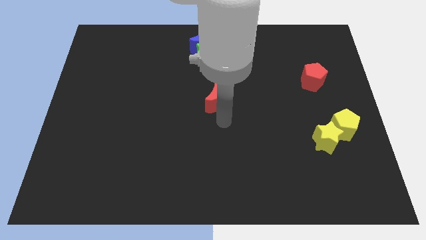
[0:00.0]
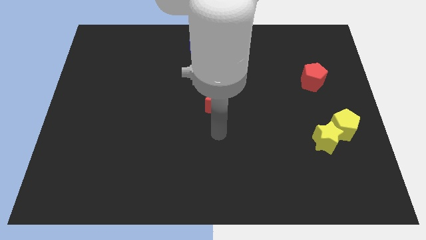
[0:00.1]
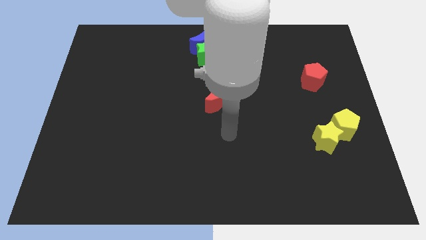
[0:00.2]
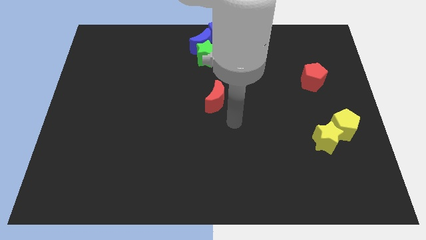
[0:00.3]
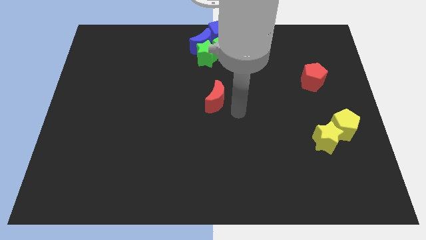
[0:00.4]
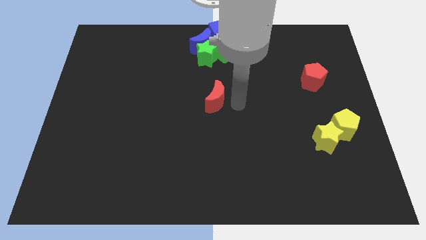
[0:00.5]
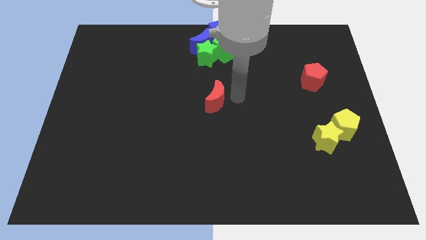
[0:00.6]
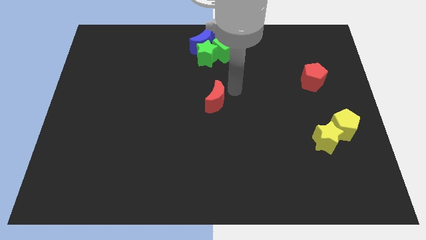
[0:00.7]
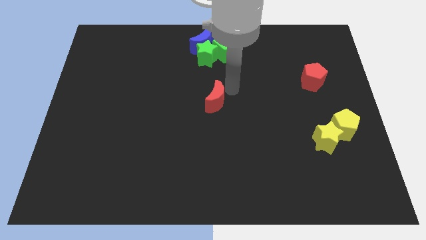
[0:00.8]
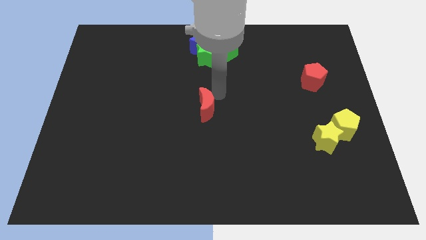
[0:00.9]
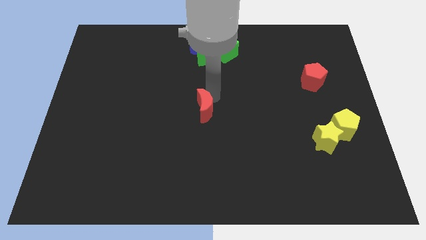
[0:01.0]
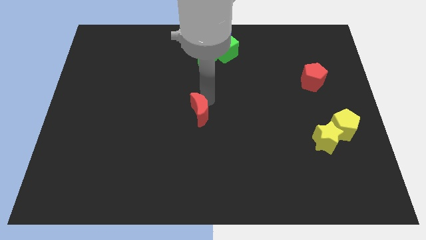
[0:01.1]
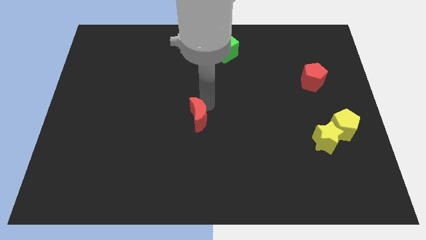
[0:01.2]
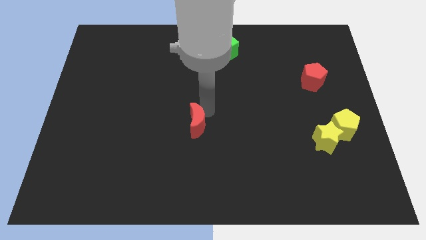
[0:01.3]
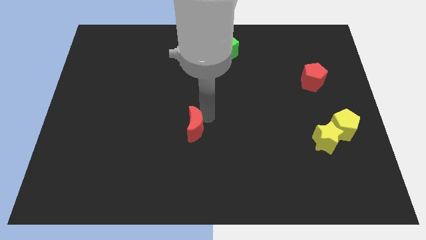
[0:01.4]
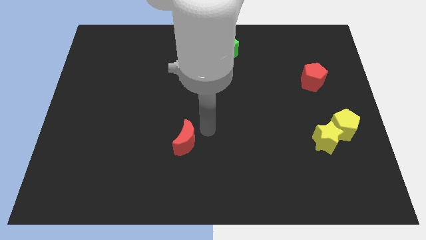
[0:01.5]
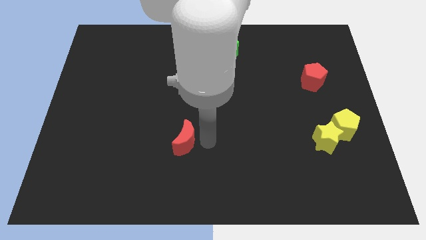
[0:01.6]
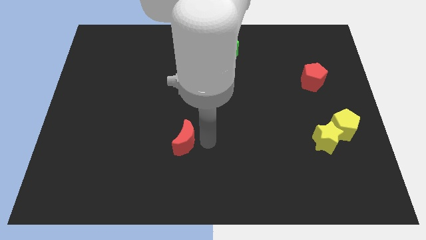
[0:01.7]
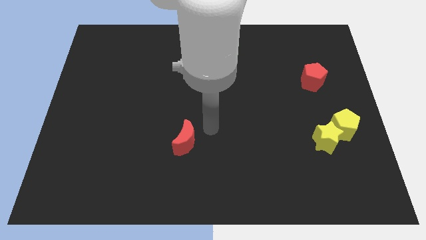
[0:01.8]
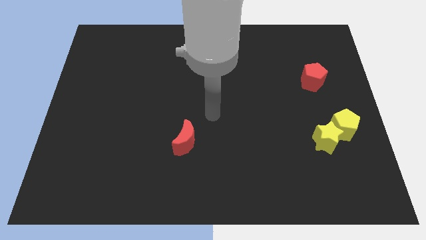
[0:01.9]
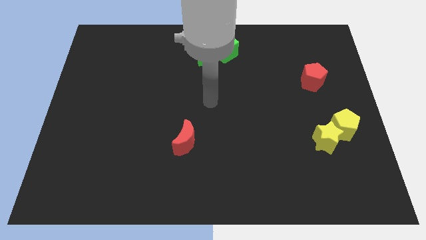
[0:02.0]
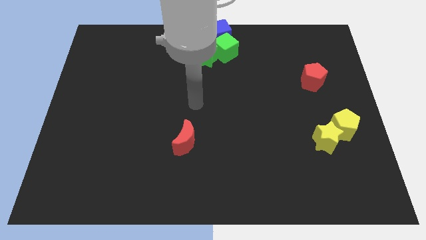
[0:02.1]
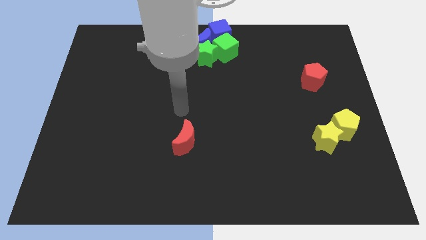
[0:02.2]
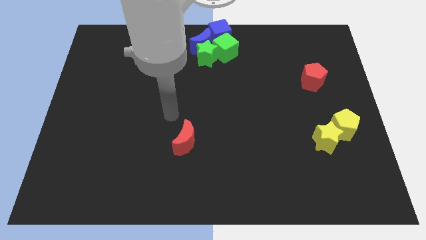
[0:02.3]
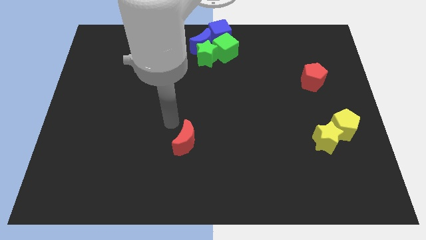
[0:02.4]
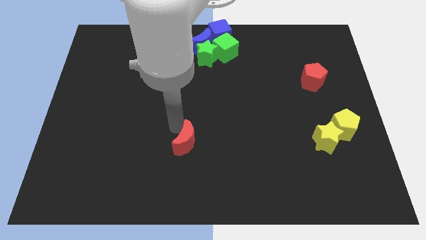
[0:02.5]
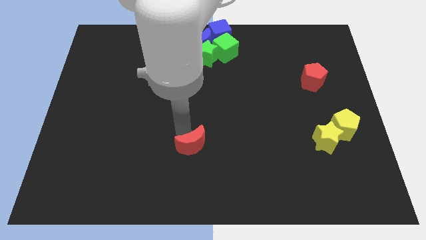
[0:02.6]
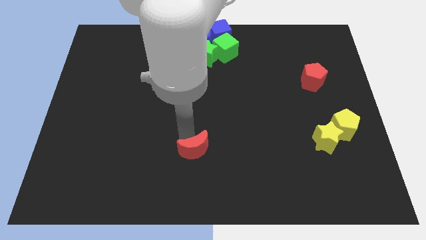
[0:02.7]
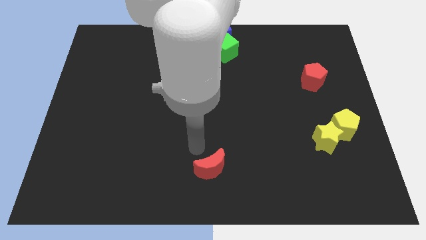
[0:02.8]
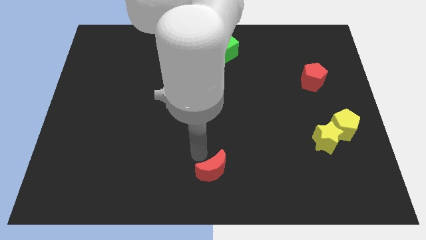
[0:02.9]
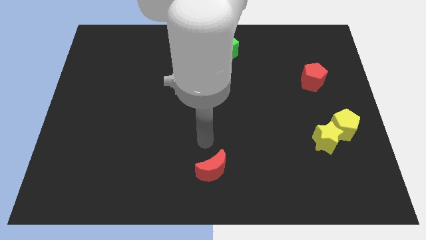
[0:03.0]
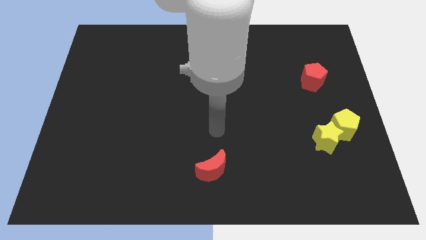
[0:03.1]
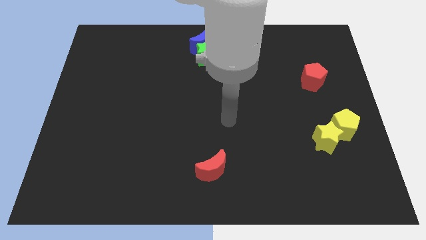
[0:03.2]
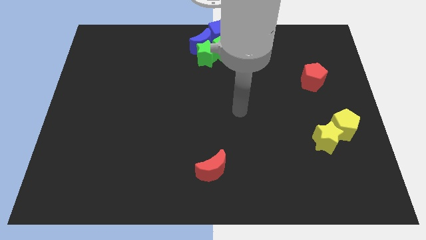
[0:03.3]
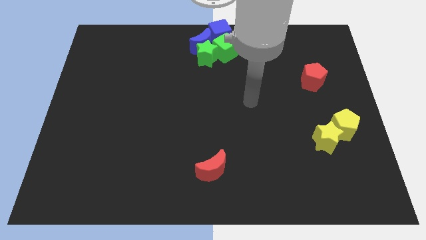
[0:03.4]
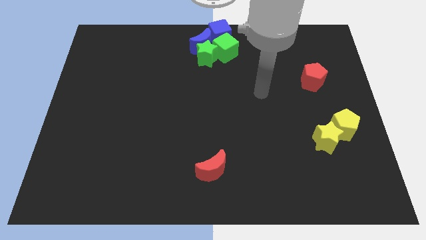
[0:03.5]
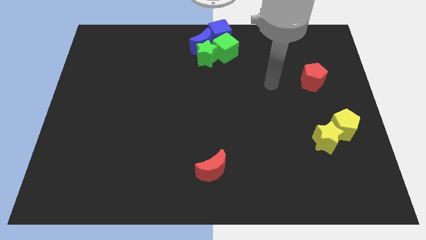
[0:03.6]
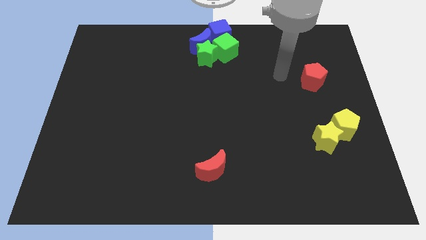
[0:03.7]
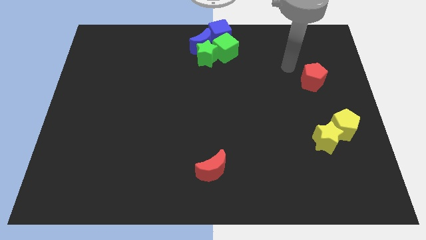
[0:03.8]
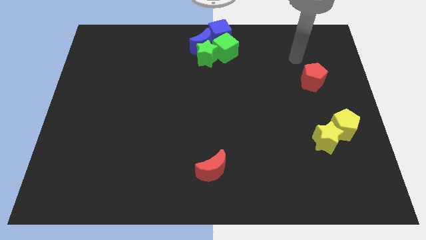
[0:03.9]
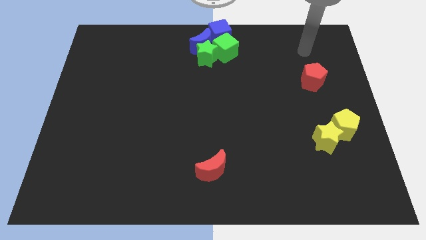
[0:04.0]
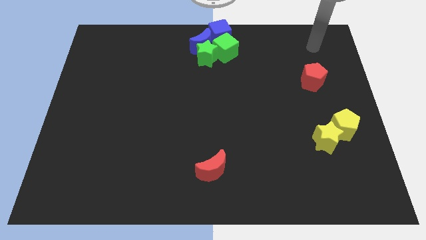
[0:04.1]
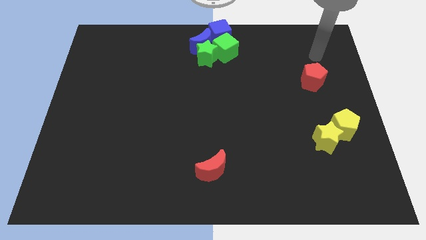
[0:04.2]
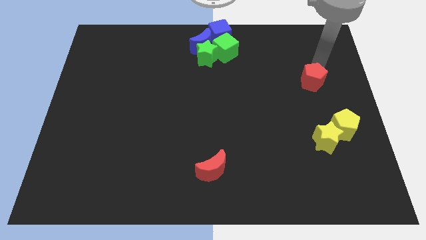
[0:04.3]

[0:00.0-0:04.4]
push the red crescent towards the bottom center of the board

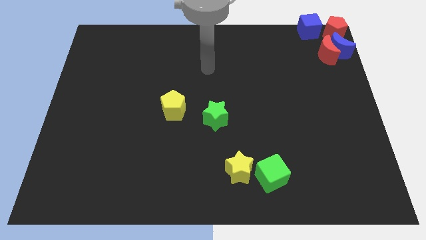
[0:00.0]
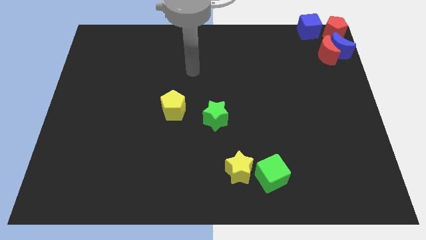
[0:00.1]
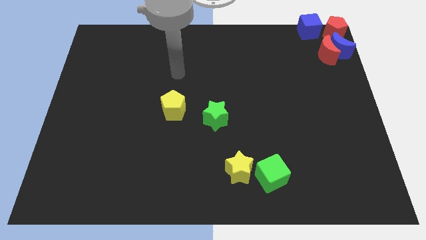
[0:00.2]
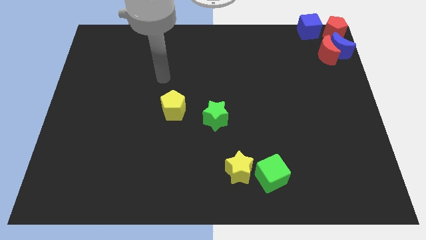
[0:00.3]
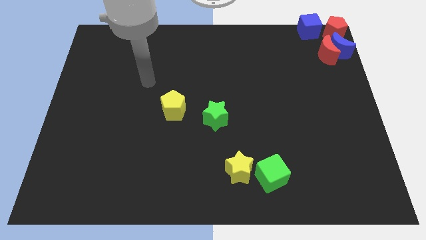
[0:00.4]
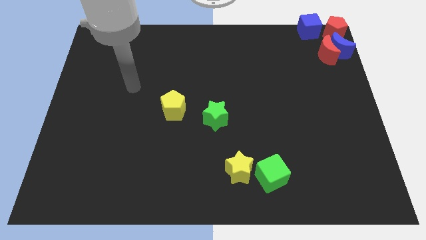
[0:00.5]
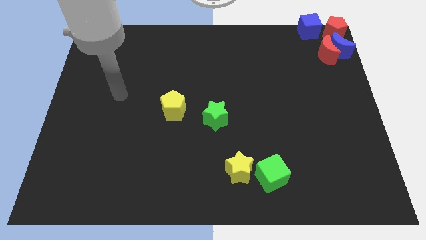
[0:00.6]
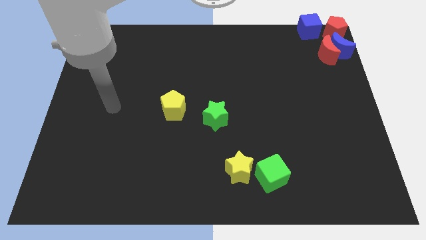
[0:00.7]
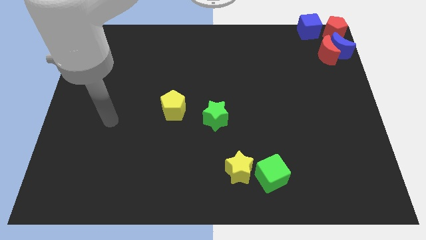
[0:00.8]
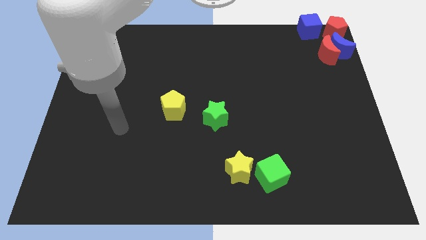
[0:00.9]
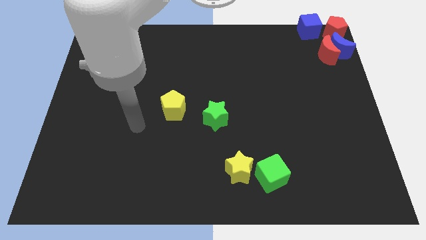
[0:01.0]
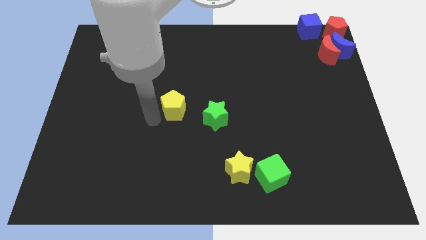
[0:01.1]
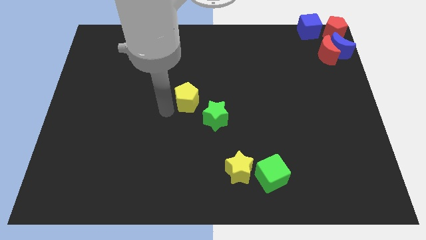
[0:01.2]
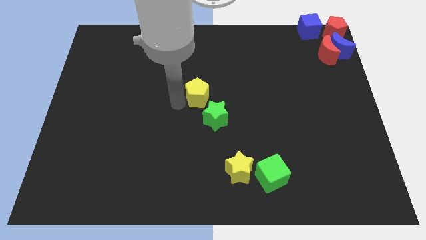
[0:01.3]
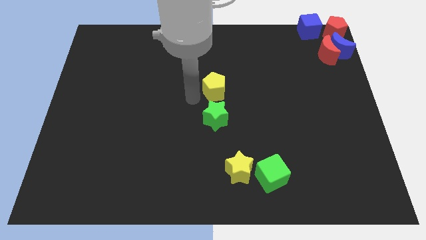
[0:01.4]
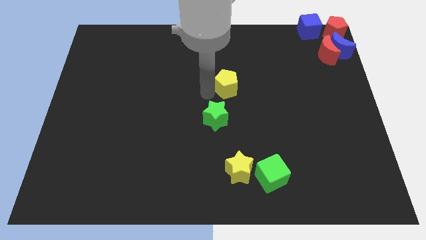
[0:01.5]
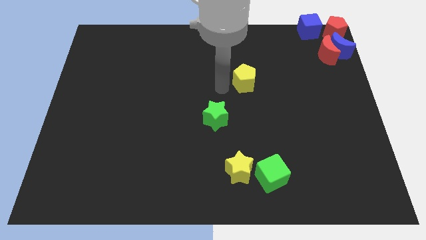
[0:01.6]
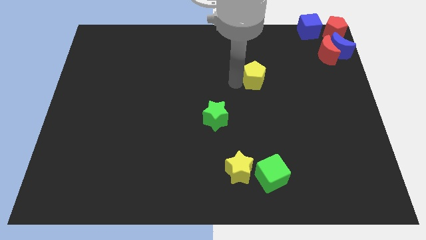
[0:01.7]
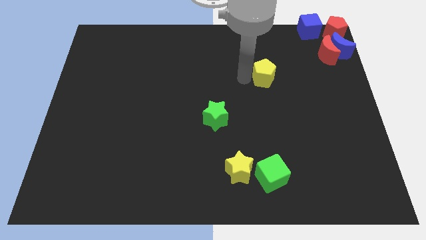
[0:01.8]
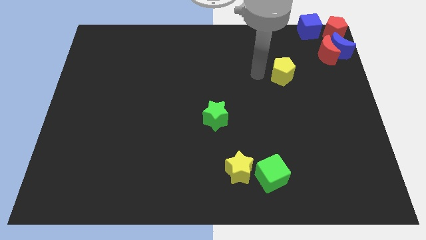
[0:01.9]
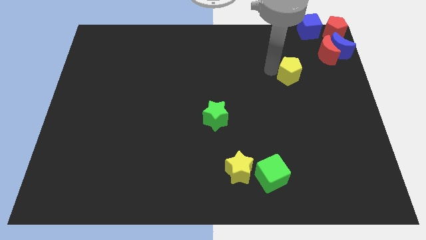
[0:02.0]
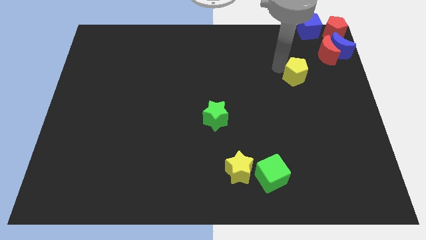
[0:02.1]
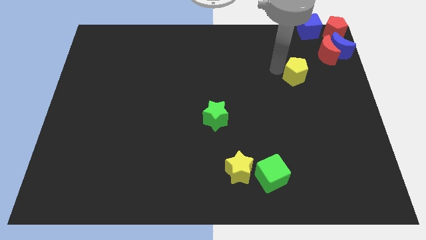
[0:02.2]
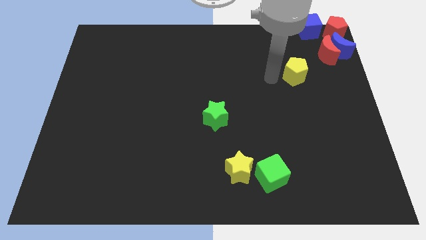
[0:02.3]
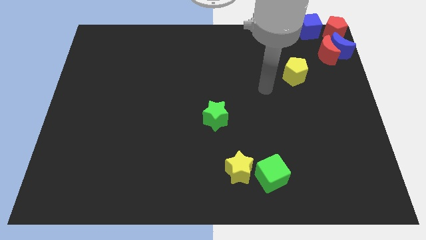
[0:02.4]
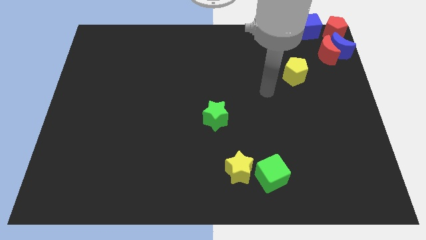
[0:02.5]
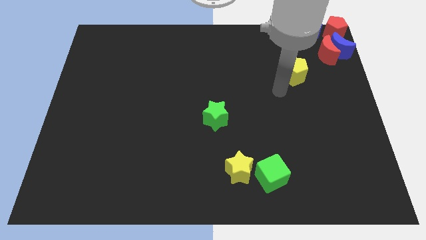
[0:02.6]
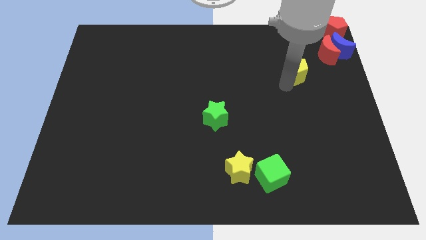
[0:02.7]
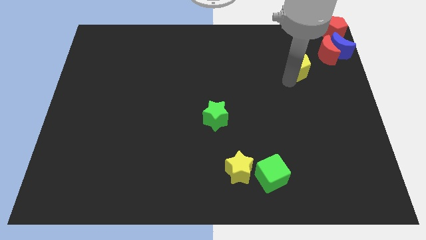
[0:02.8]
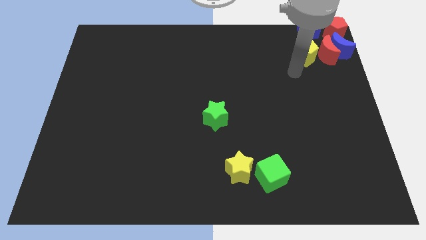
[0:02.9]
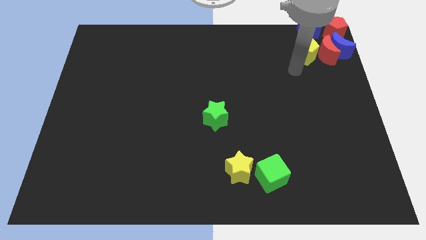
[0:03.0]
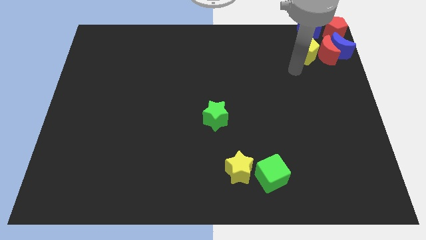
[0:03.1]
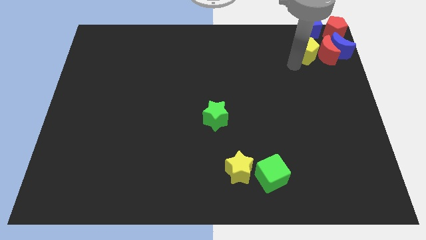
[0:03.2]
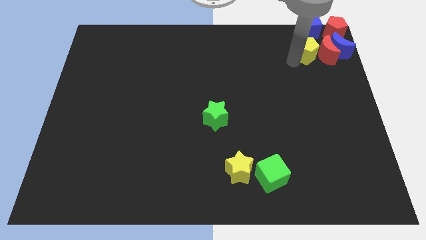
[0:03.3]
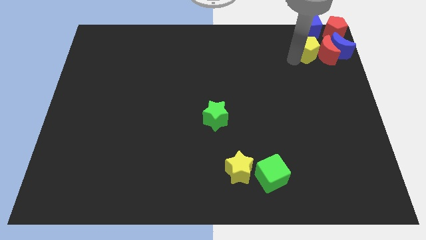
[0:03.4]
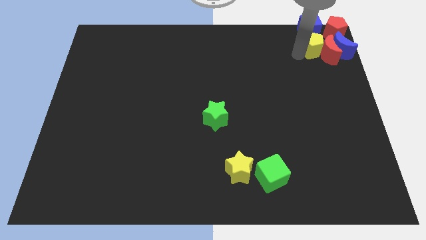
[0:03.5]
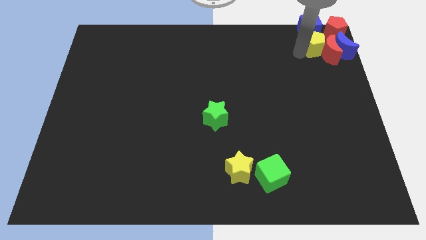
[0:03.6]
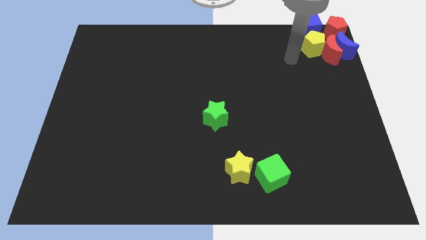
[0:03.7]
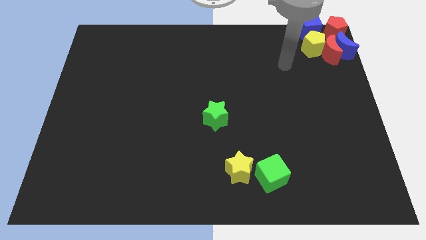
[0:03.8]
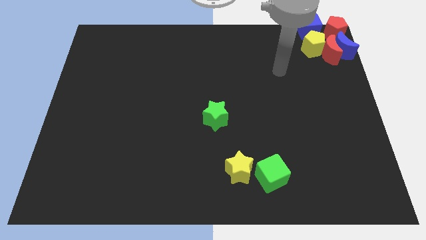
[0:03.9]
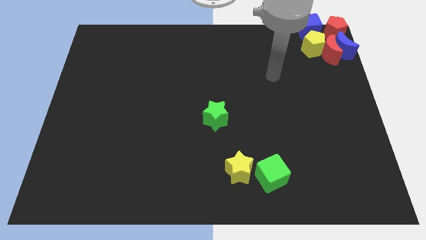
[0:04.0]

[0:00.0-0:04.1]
push the yellow pentagon below the blue cube

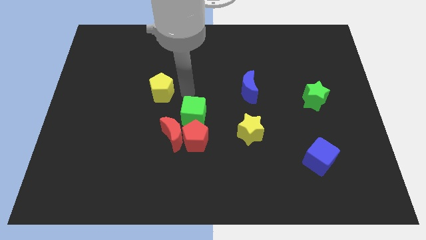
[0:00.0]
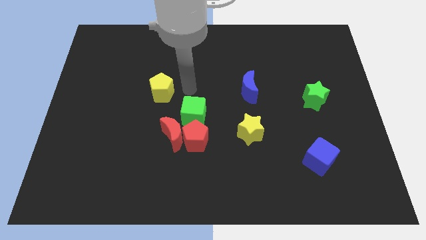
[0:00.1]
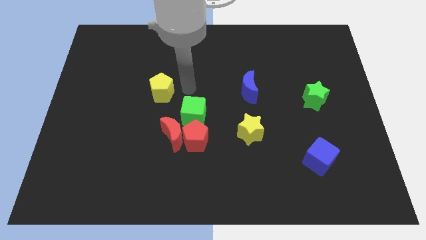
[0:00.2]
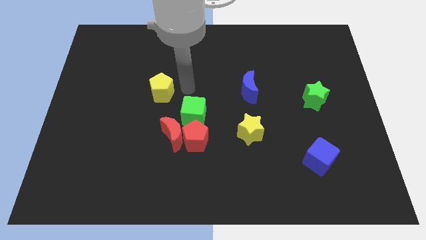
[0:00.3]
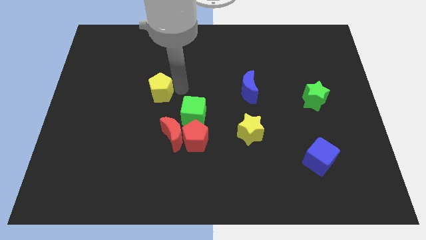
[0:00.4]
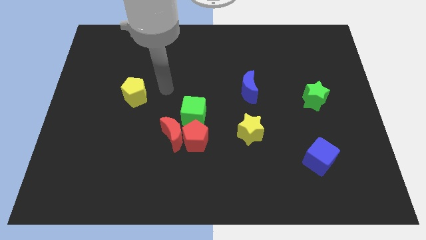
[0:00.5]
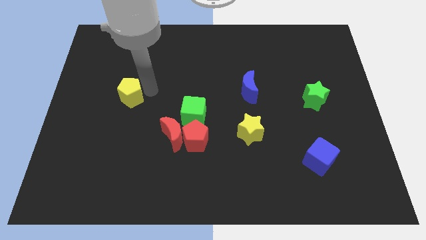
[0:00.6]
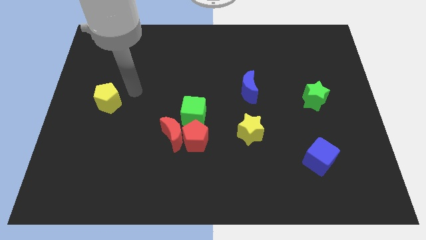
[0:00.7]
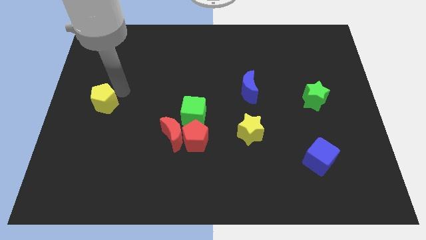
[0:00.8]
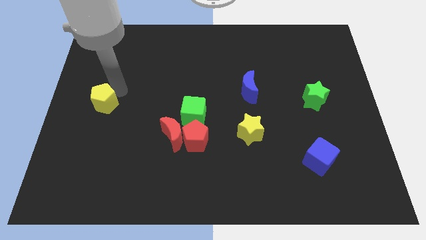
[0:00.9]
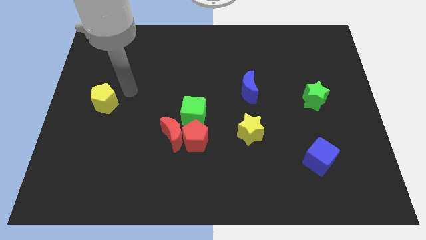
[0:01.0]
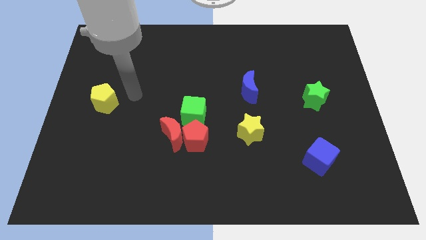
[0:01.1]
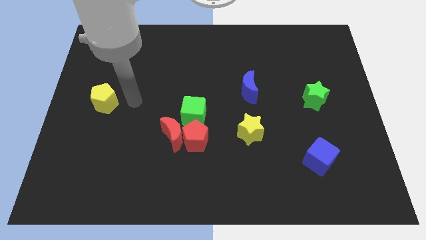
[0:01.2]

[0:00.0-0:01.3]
move the yellow pentagon slightly to the left
